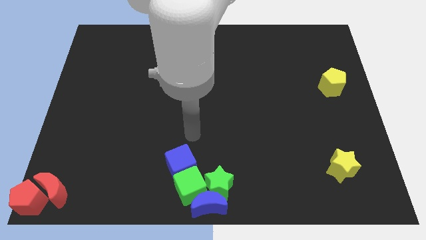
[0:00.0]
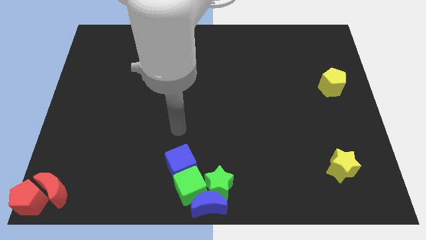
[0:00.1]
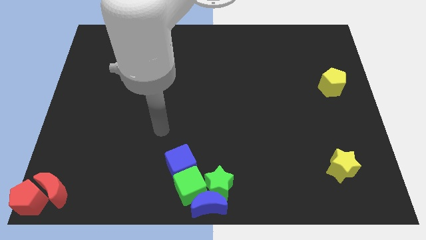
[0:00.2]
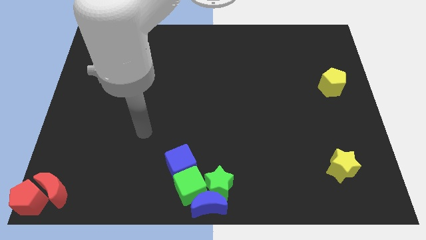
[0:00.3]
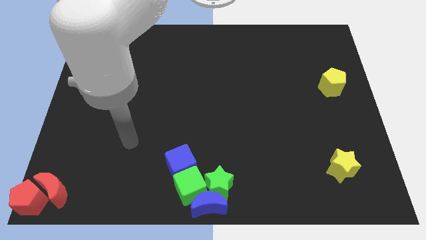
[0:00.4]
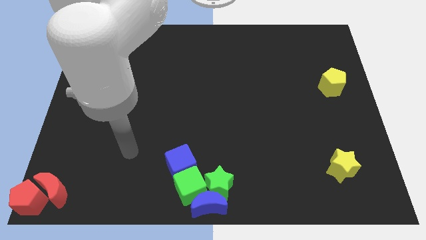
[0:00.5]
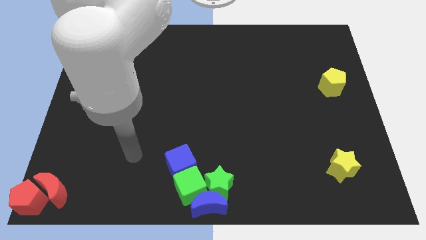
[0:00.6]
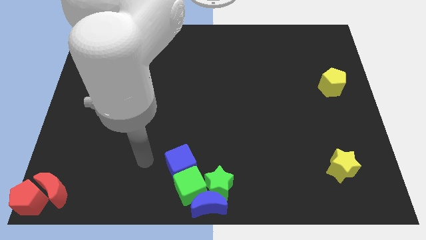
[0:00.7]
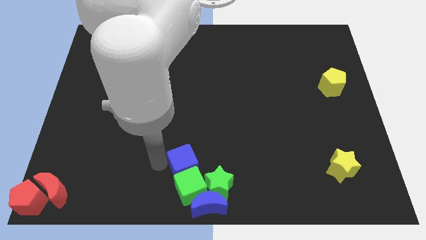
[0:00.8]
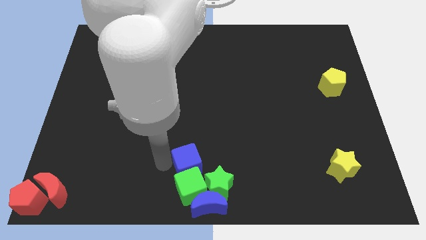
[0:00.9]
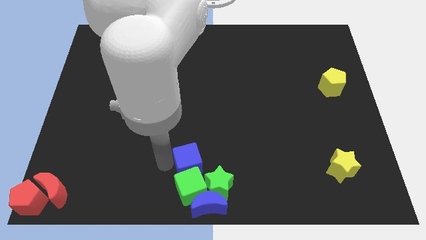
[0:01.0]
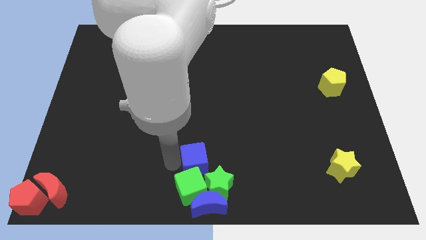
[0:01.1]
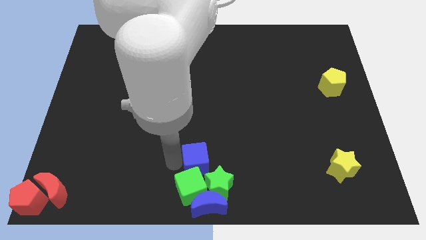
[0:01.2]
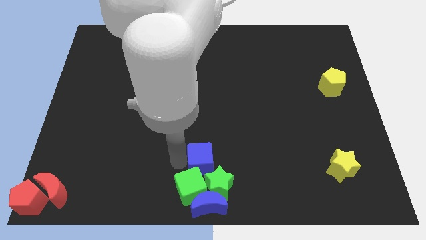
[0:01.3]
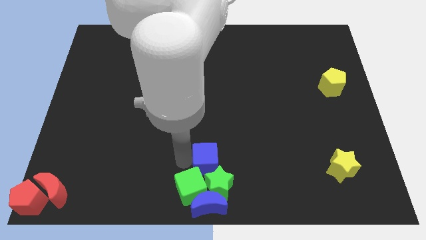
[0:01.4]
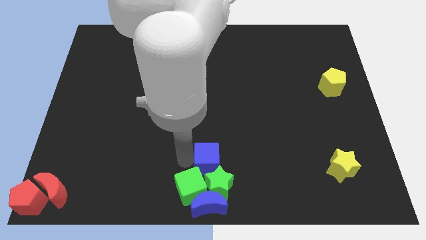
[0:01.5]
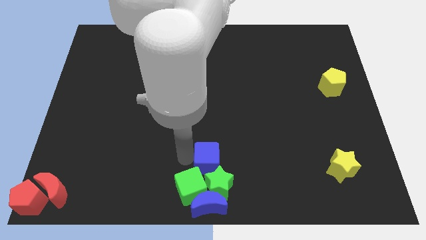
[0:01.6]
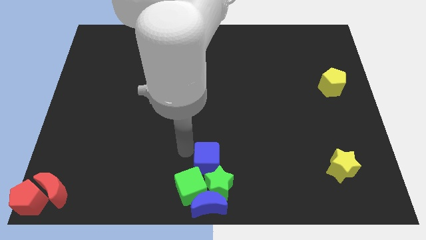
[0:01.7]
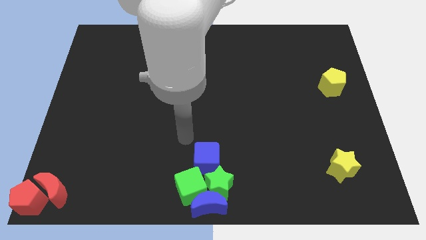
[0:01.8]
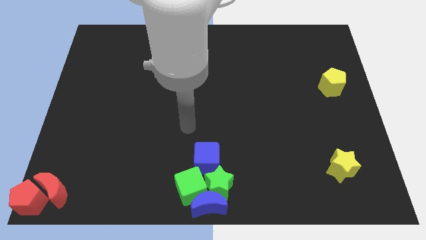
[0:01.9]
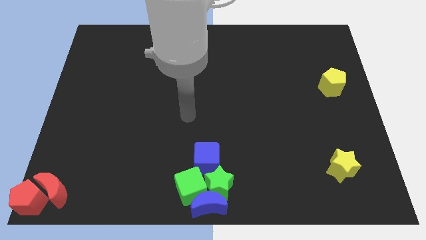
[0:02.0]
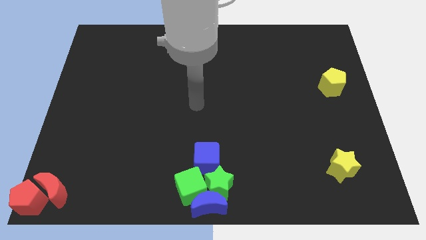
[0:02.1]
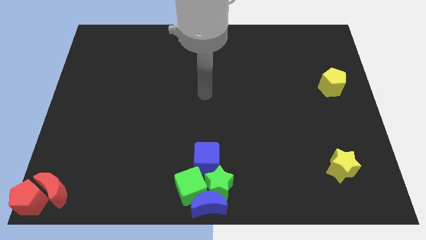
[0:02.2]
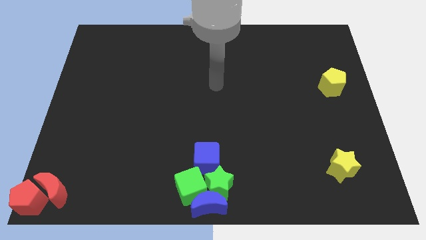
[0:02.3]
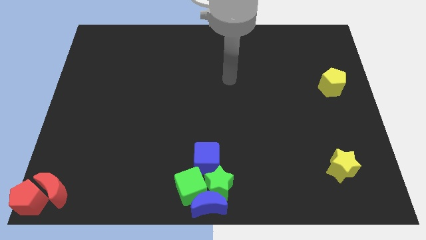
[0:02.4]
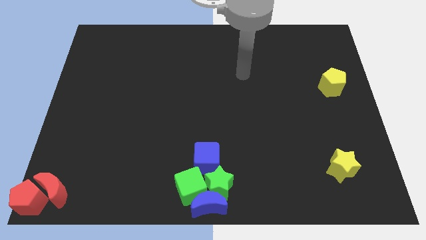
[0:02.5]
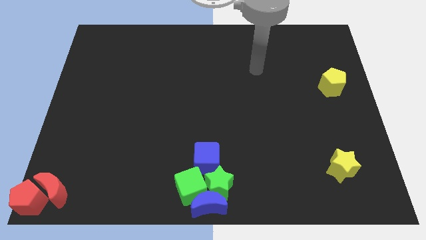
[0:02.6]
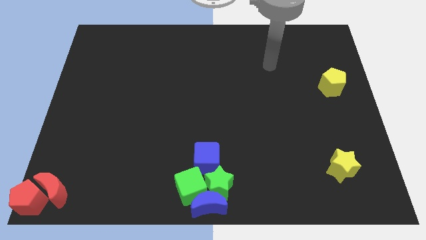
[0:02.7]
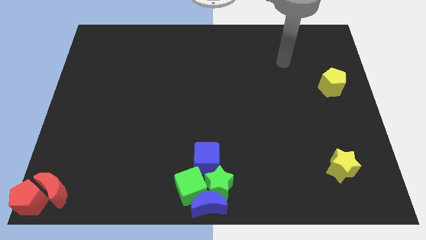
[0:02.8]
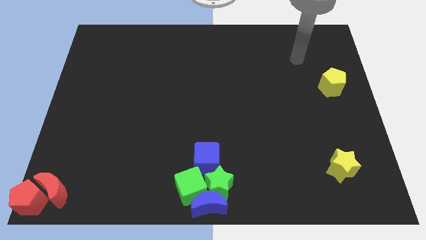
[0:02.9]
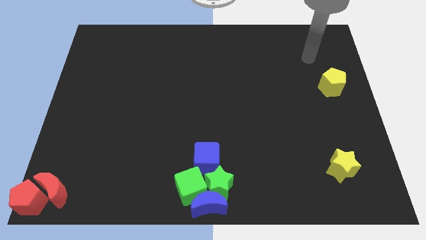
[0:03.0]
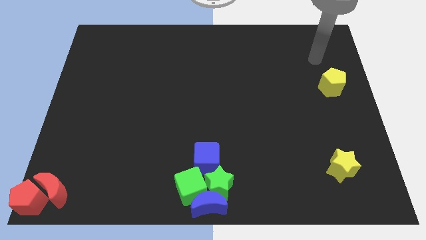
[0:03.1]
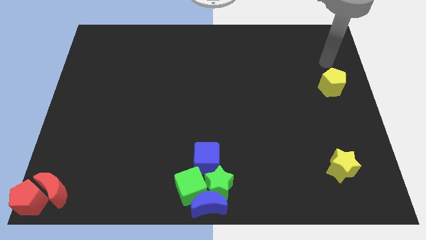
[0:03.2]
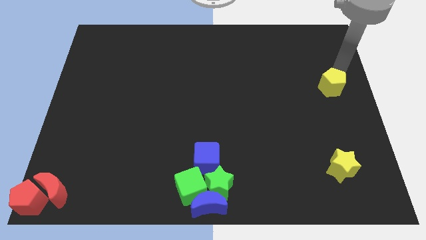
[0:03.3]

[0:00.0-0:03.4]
place blue cube on the top of green star and cube

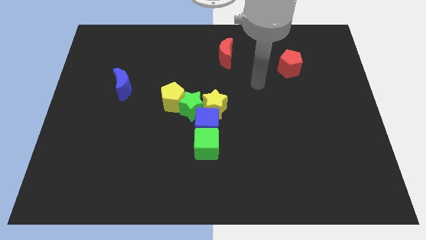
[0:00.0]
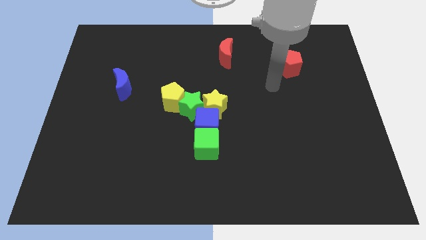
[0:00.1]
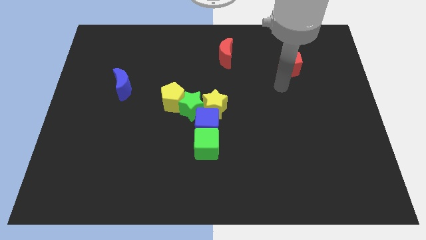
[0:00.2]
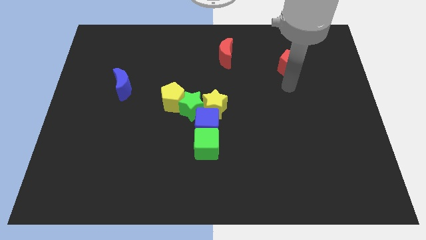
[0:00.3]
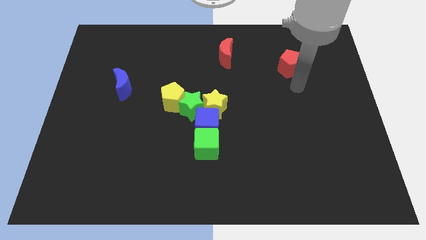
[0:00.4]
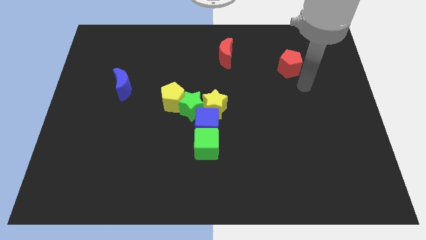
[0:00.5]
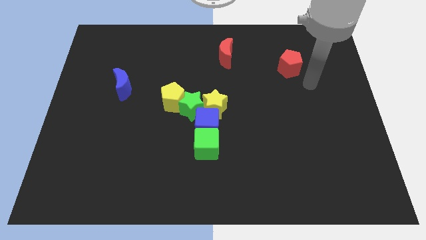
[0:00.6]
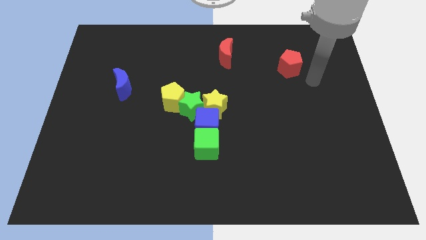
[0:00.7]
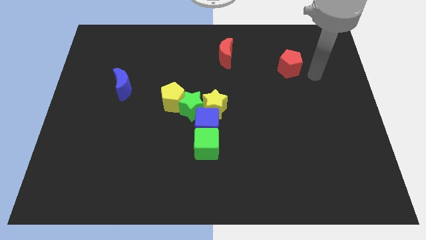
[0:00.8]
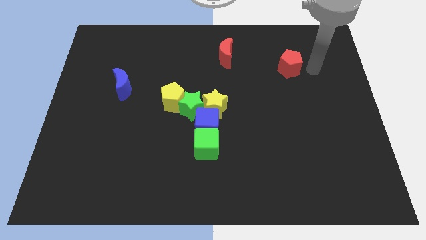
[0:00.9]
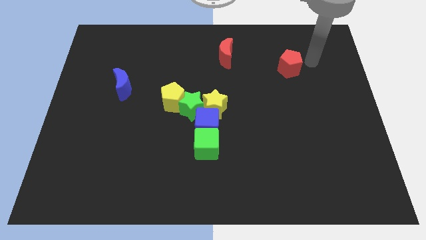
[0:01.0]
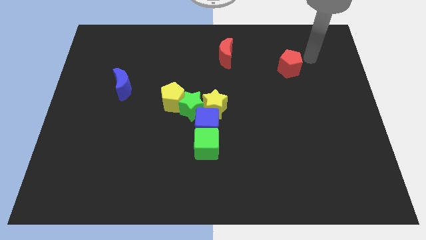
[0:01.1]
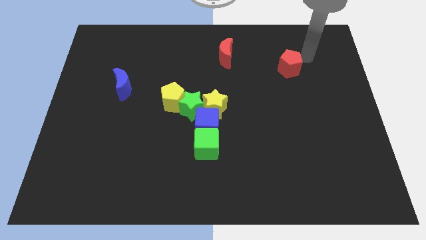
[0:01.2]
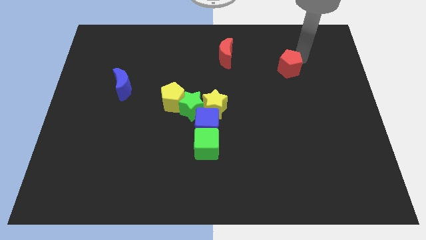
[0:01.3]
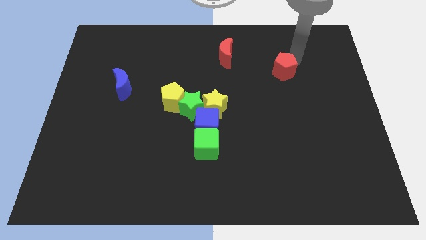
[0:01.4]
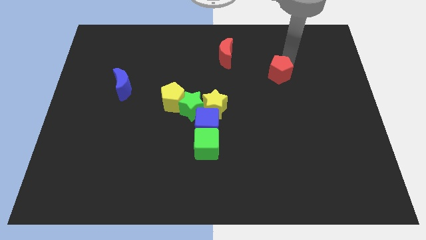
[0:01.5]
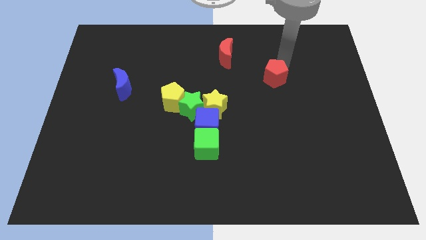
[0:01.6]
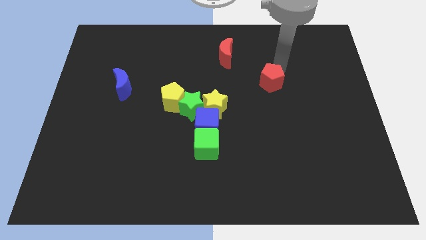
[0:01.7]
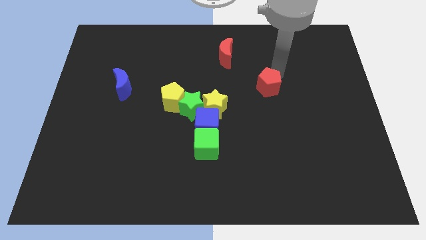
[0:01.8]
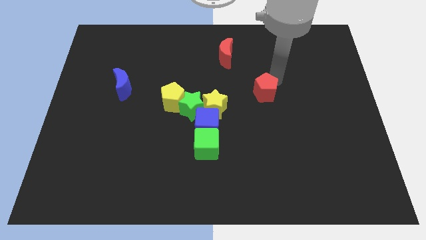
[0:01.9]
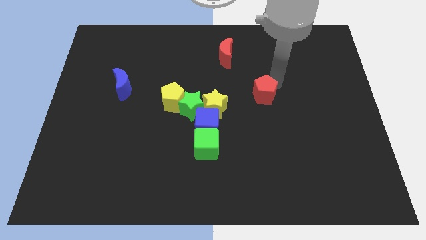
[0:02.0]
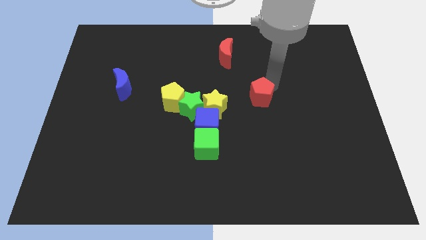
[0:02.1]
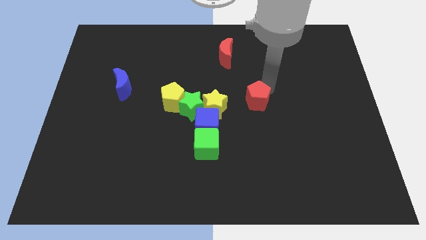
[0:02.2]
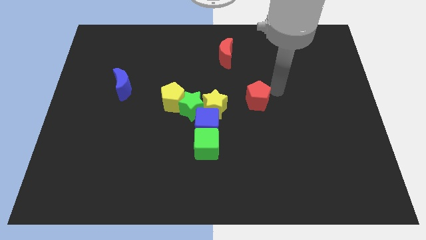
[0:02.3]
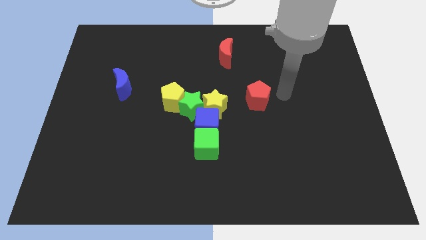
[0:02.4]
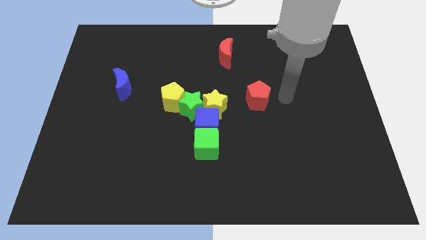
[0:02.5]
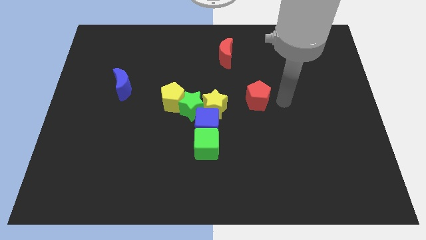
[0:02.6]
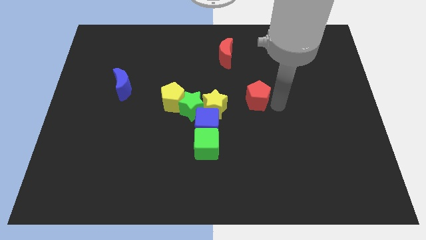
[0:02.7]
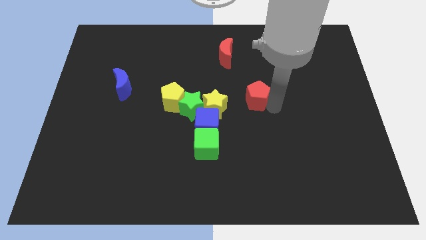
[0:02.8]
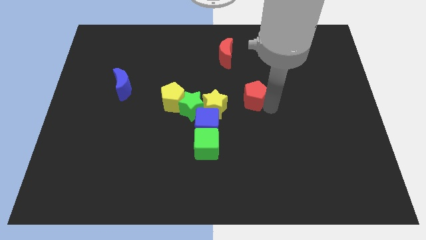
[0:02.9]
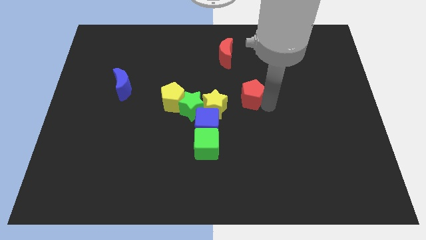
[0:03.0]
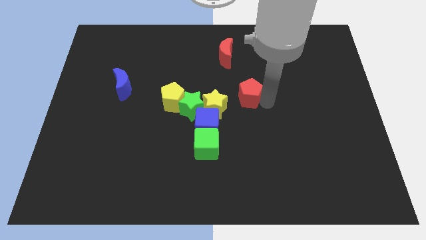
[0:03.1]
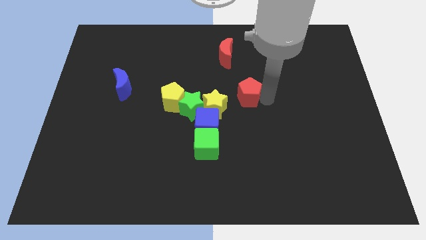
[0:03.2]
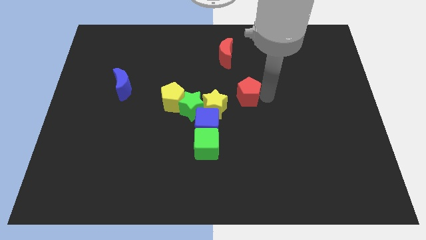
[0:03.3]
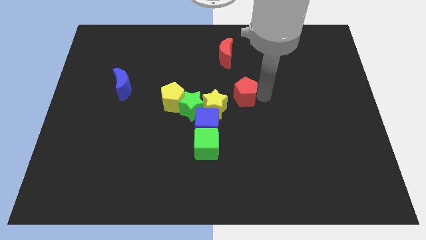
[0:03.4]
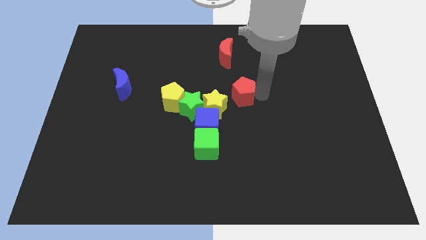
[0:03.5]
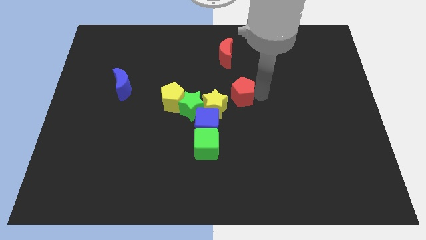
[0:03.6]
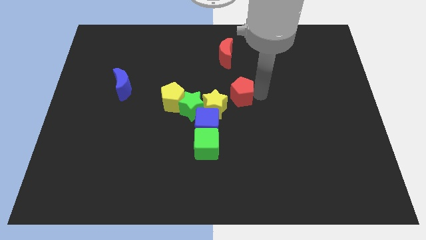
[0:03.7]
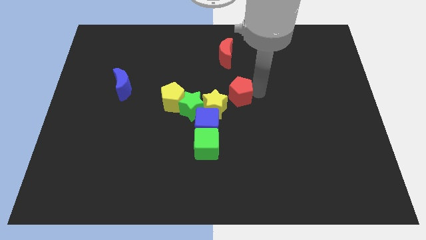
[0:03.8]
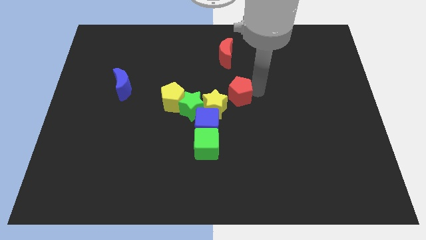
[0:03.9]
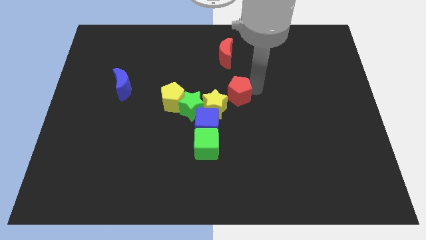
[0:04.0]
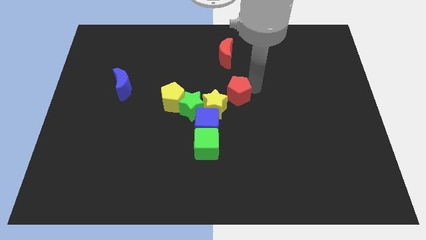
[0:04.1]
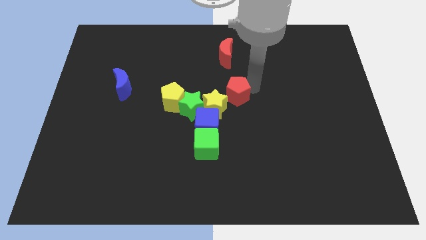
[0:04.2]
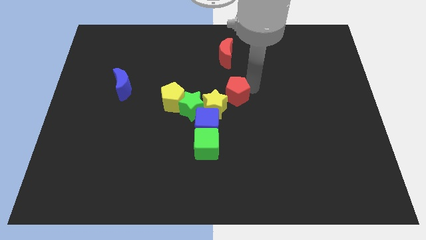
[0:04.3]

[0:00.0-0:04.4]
put the red pentagon to the top right side of the yellow star

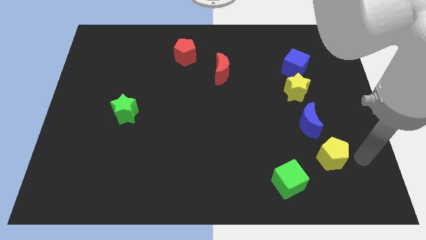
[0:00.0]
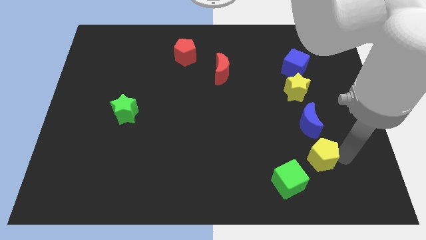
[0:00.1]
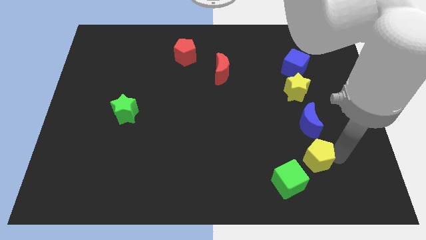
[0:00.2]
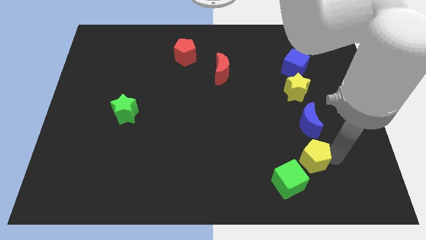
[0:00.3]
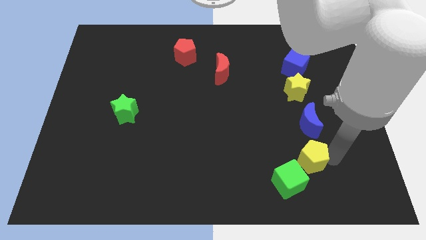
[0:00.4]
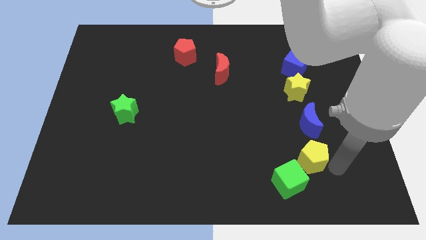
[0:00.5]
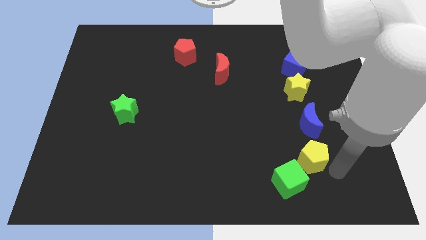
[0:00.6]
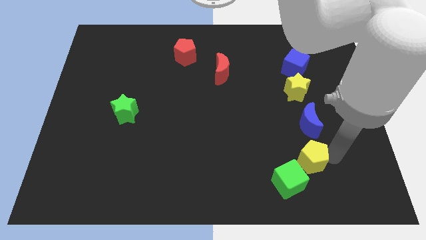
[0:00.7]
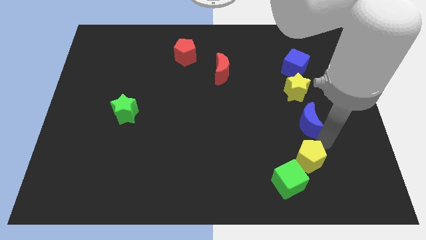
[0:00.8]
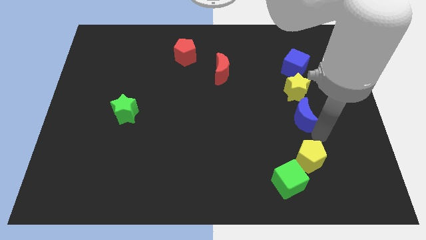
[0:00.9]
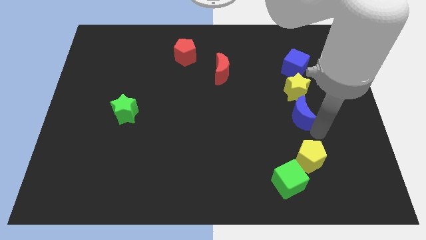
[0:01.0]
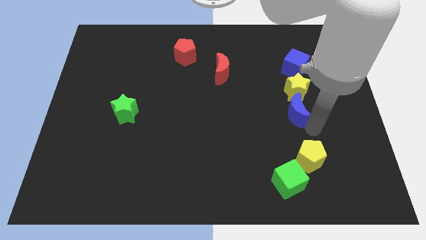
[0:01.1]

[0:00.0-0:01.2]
push yellow pentagon into green cube
